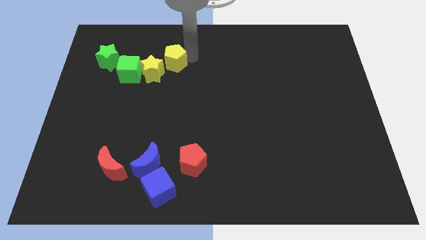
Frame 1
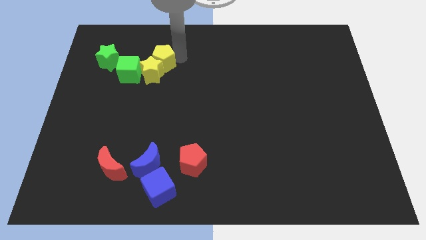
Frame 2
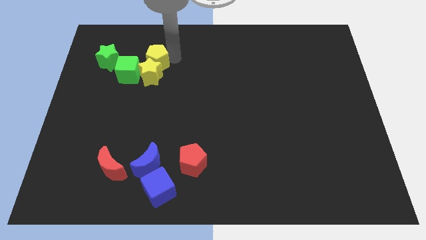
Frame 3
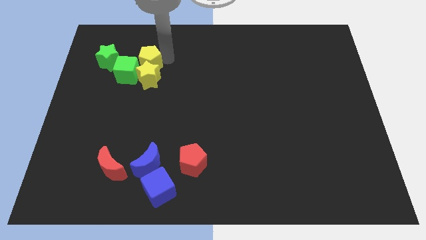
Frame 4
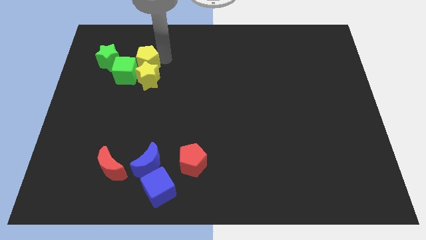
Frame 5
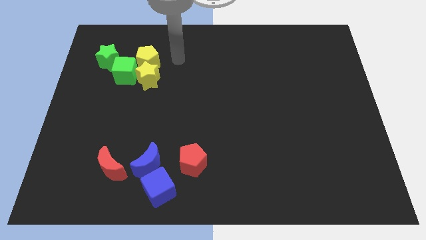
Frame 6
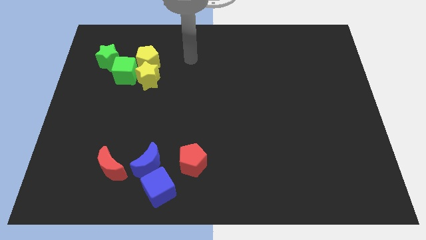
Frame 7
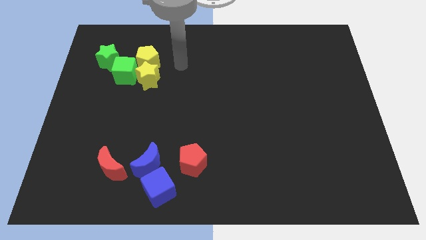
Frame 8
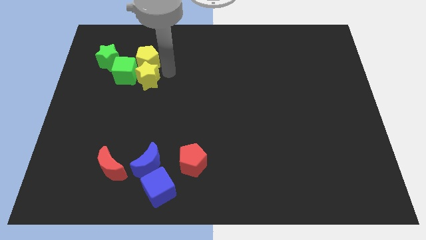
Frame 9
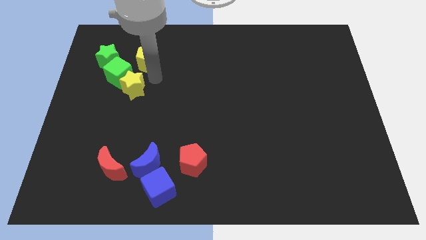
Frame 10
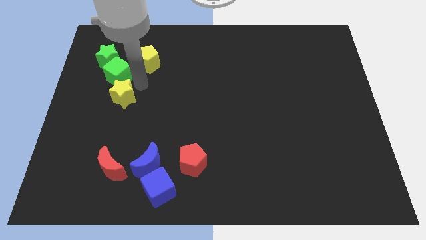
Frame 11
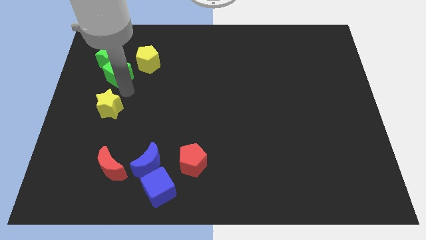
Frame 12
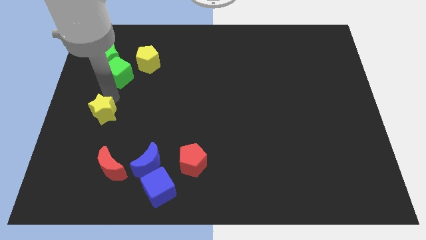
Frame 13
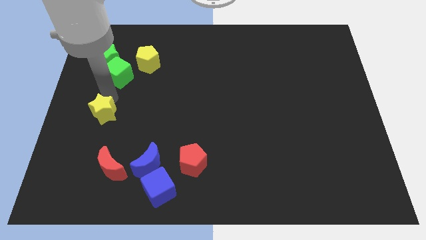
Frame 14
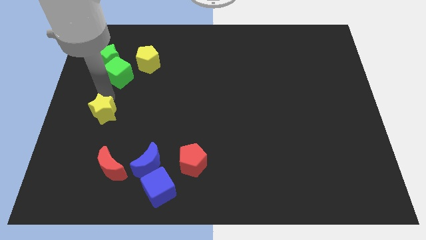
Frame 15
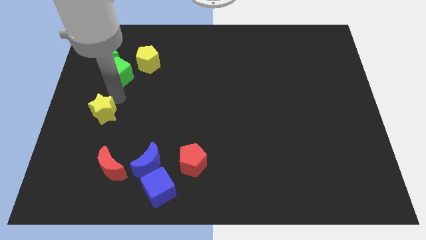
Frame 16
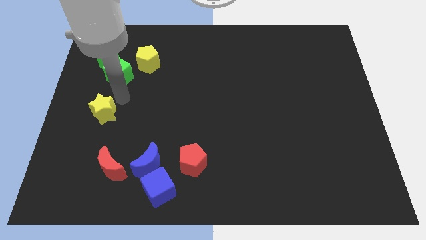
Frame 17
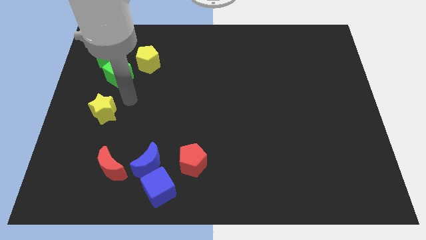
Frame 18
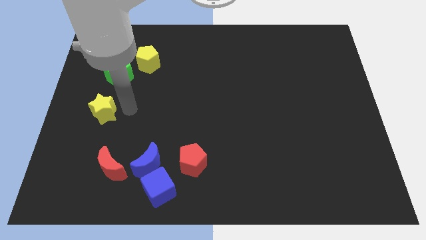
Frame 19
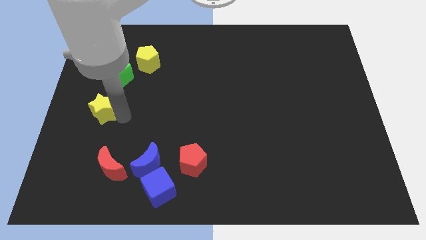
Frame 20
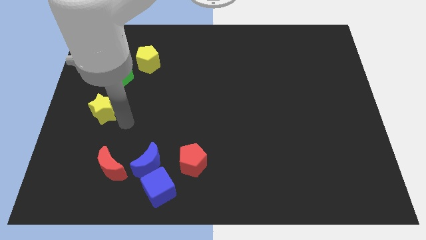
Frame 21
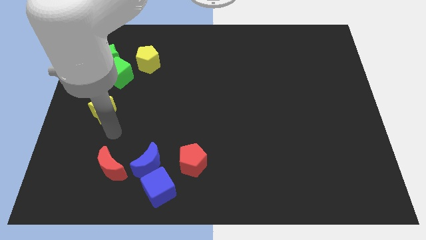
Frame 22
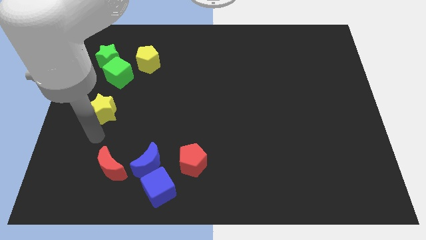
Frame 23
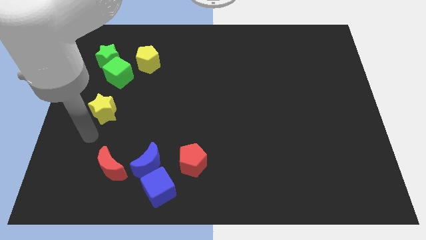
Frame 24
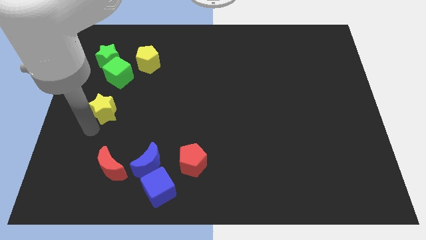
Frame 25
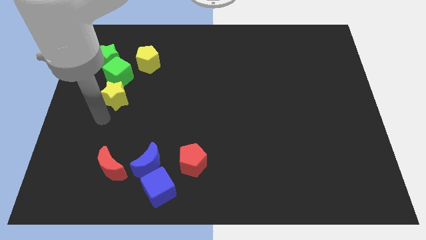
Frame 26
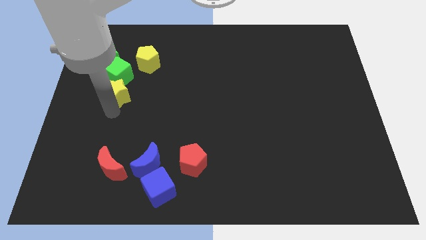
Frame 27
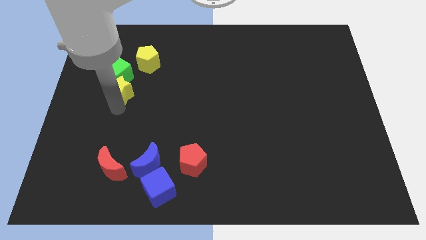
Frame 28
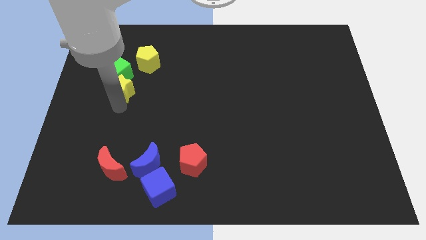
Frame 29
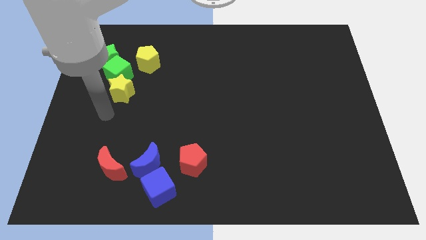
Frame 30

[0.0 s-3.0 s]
push the yellow star into the green cube

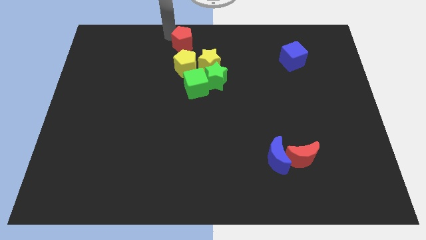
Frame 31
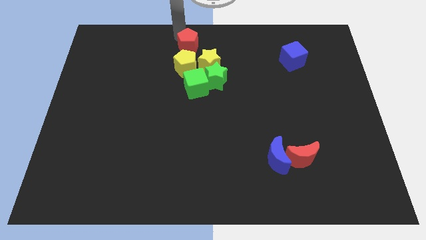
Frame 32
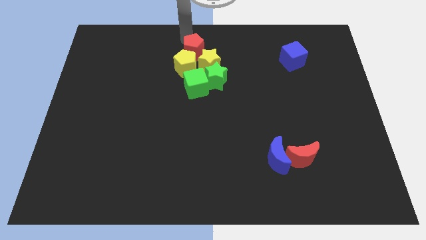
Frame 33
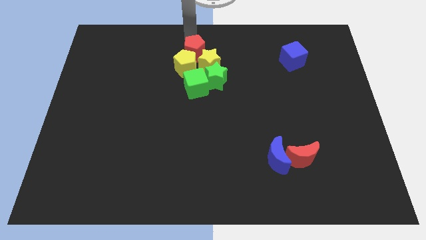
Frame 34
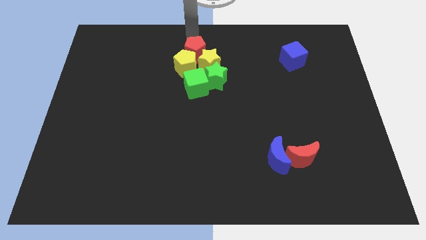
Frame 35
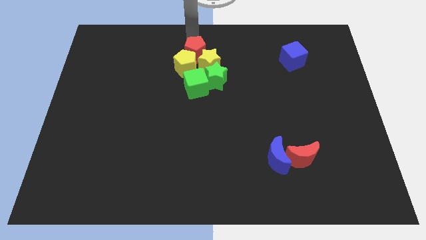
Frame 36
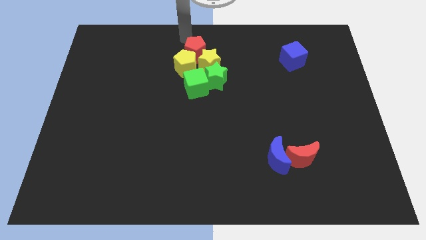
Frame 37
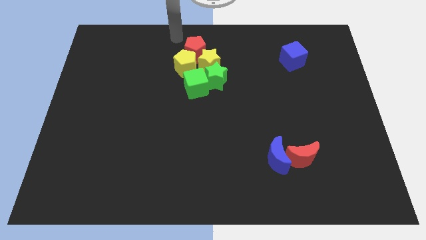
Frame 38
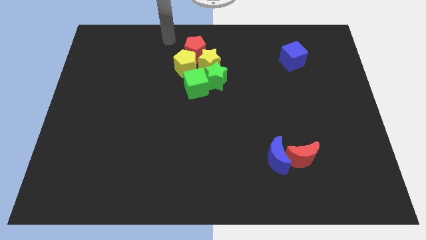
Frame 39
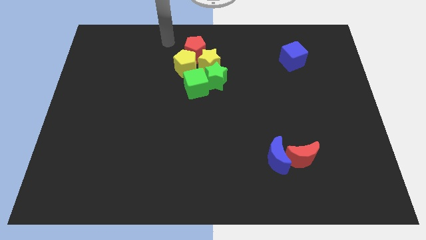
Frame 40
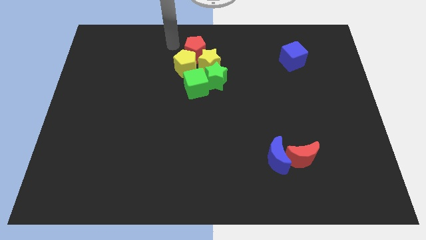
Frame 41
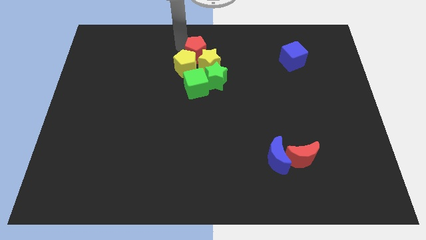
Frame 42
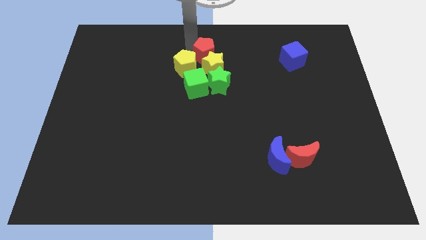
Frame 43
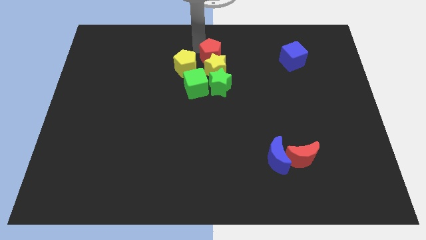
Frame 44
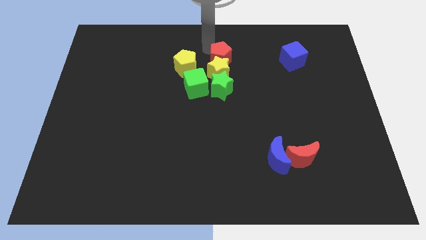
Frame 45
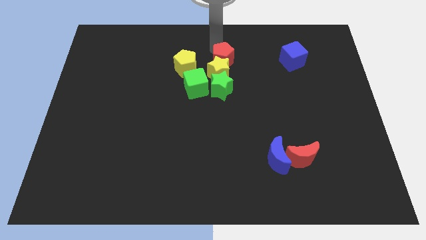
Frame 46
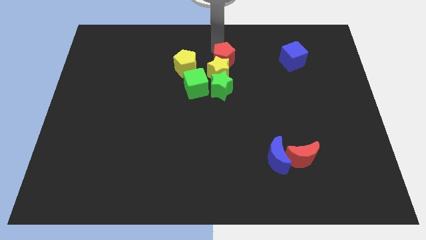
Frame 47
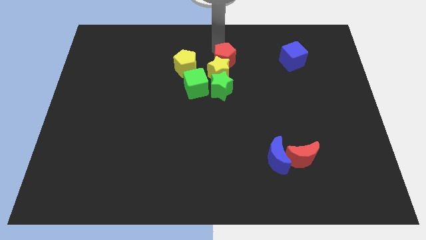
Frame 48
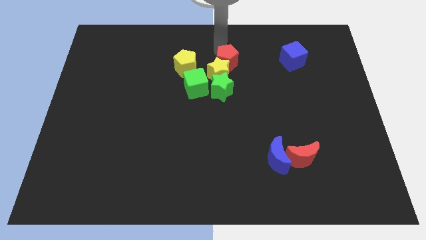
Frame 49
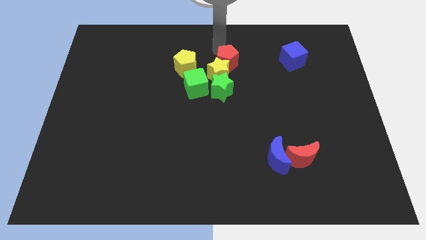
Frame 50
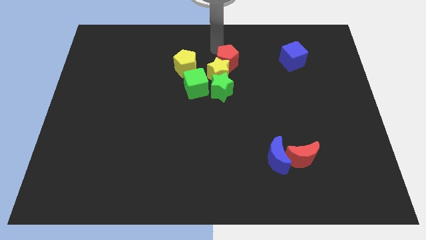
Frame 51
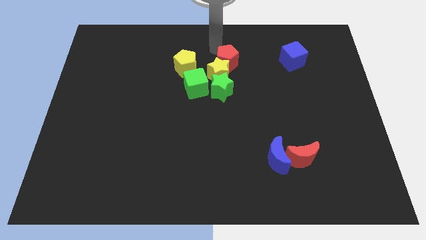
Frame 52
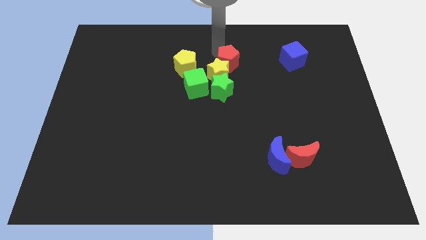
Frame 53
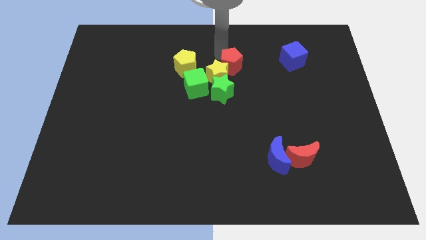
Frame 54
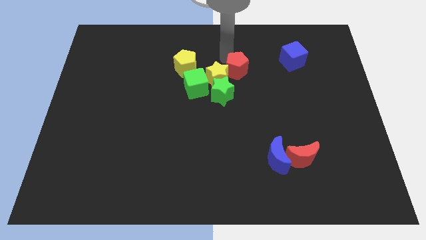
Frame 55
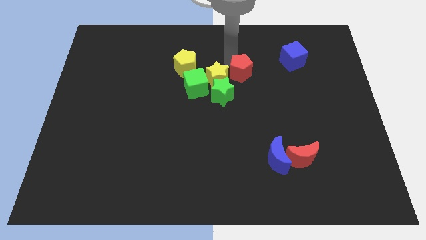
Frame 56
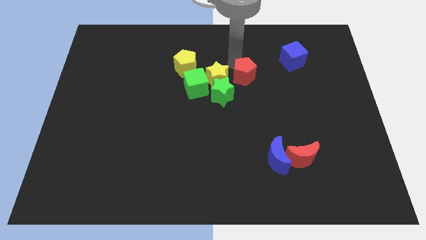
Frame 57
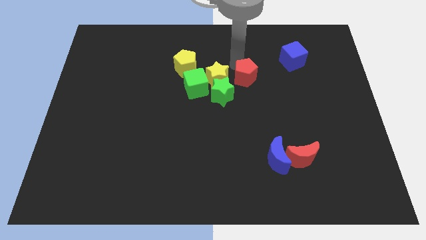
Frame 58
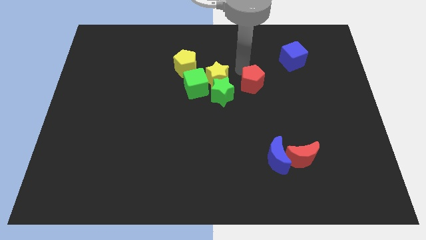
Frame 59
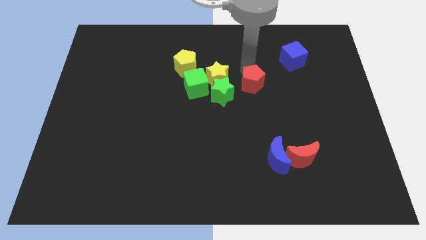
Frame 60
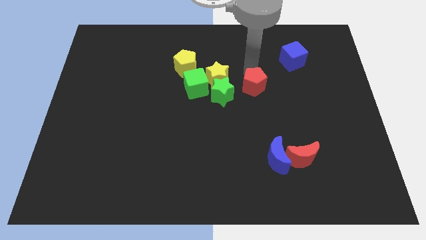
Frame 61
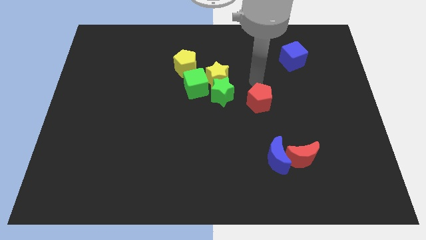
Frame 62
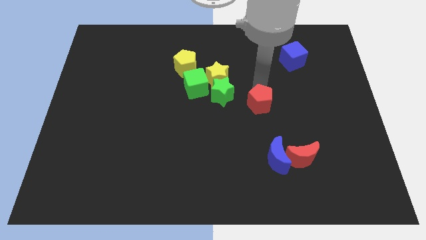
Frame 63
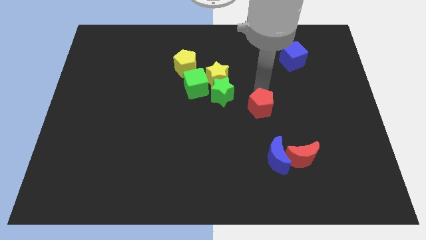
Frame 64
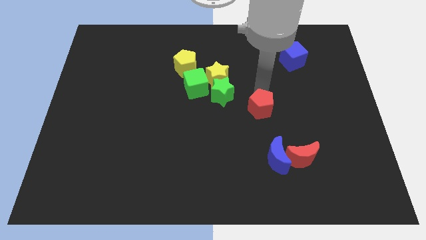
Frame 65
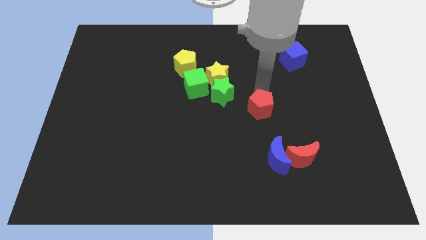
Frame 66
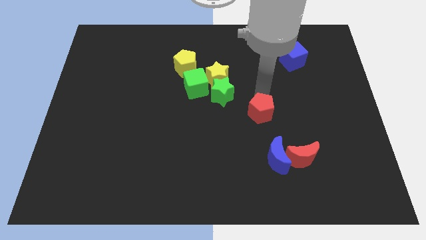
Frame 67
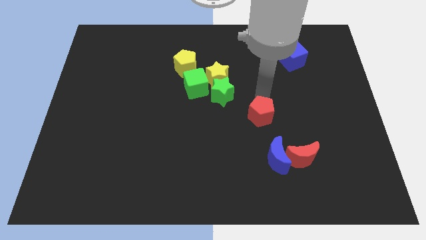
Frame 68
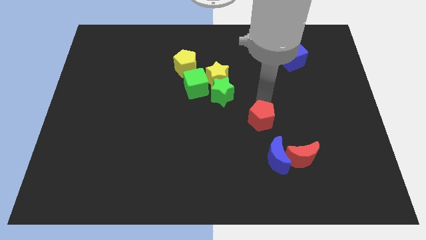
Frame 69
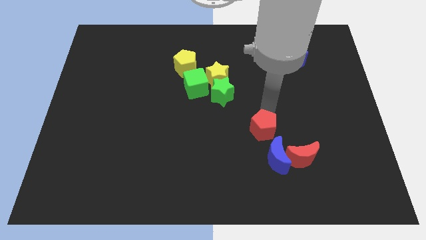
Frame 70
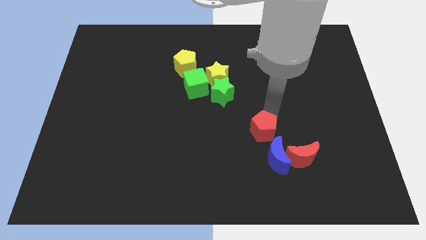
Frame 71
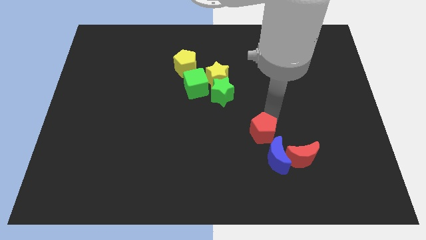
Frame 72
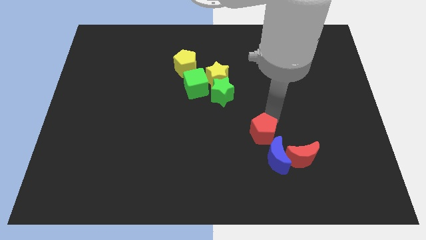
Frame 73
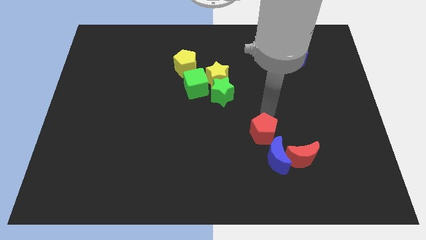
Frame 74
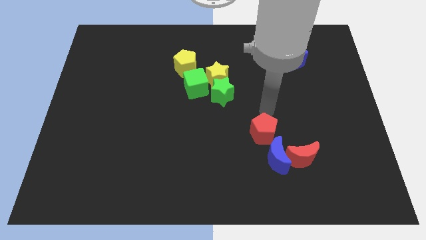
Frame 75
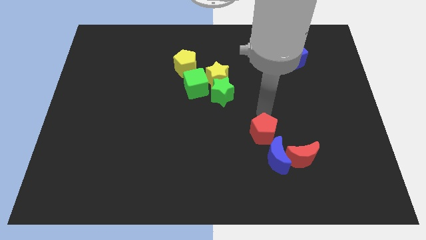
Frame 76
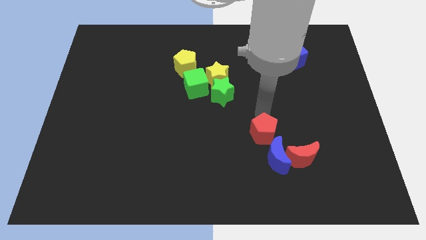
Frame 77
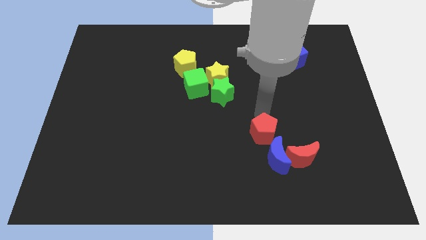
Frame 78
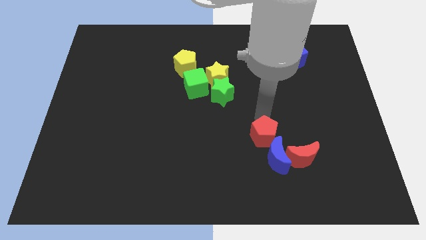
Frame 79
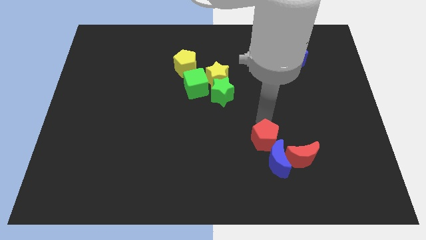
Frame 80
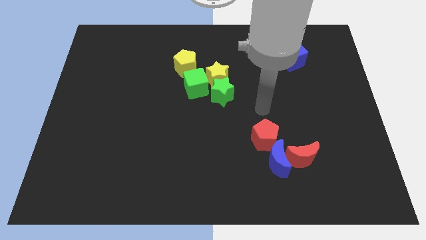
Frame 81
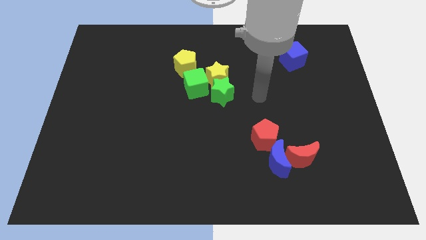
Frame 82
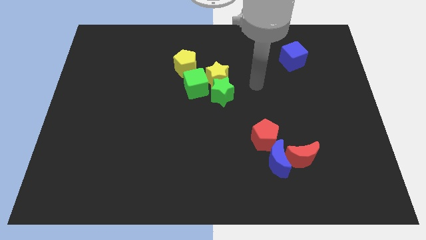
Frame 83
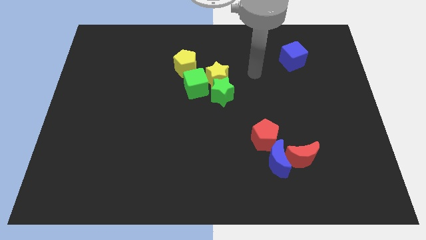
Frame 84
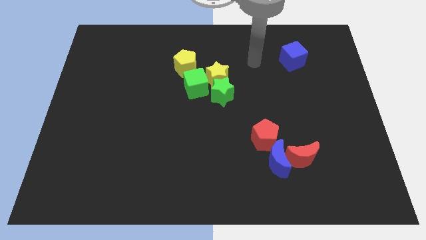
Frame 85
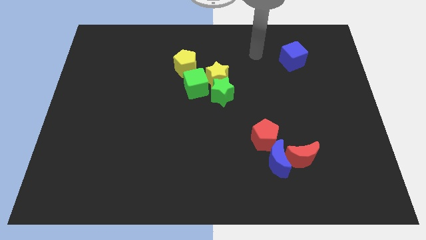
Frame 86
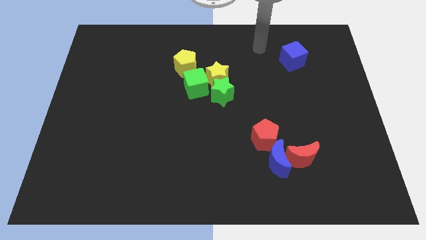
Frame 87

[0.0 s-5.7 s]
move the red pentagon to the top of blue moon

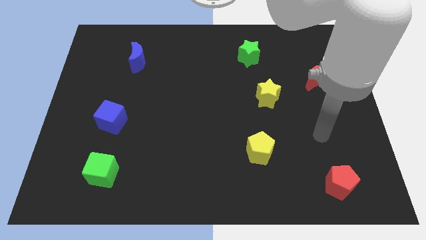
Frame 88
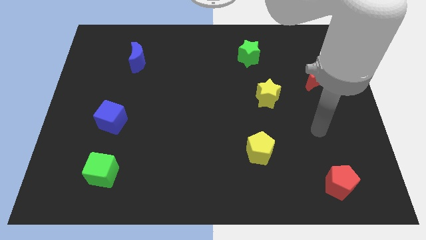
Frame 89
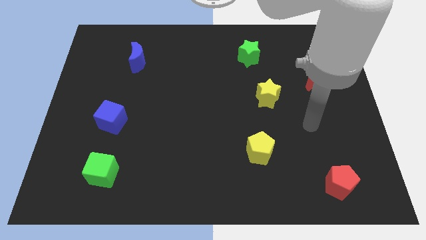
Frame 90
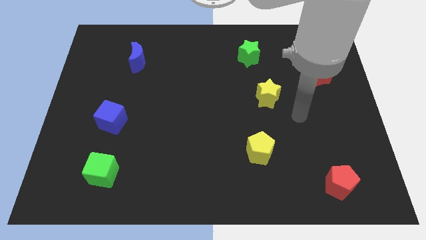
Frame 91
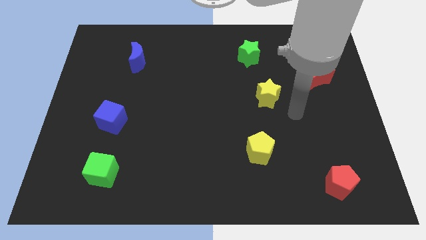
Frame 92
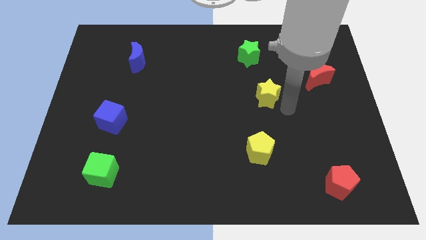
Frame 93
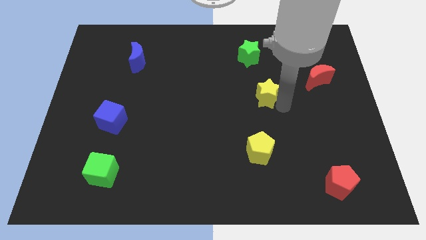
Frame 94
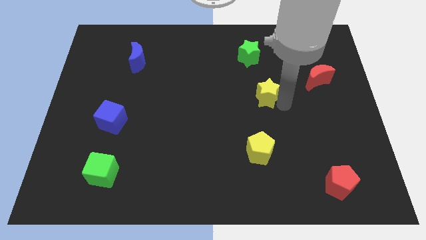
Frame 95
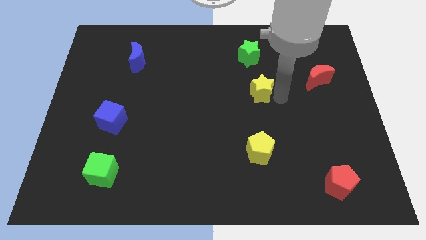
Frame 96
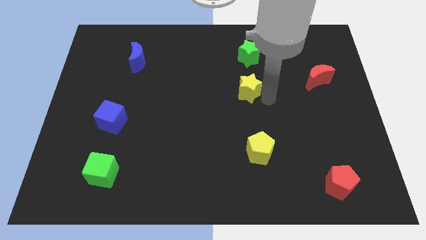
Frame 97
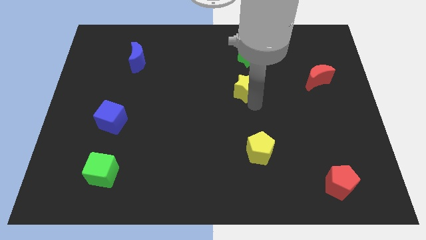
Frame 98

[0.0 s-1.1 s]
slide yellow star up below the green star
